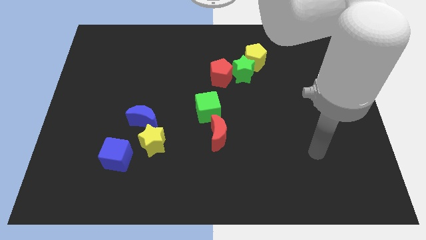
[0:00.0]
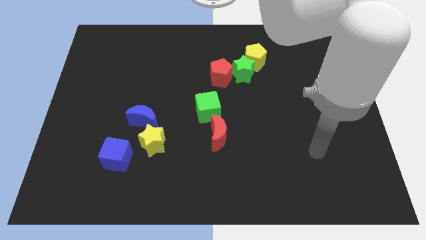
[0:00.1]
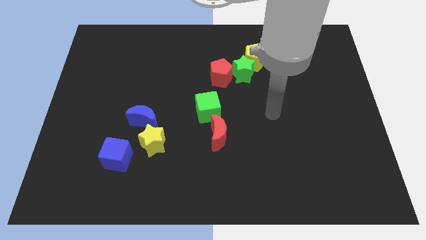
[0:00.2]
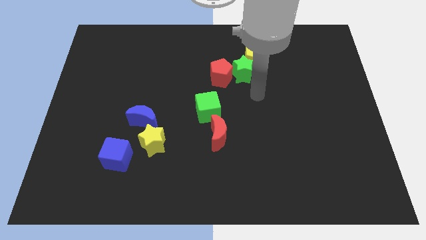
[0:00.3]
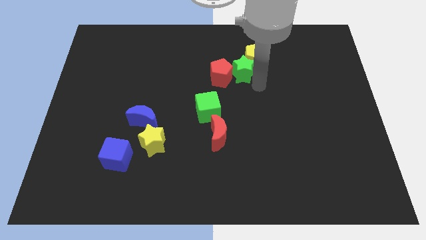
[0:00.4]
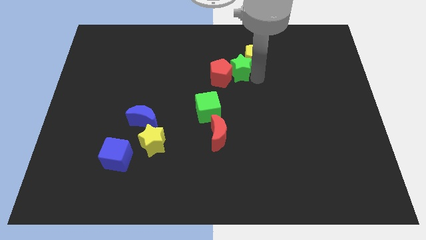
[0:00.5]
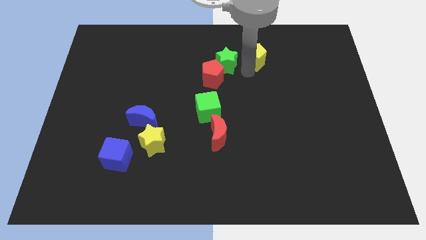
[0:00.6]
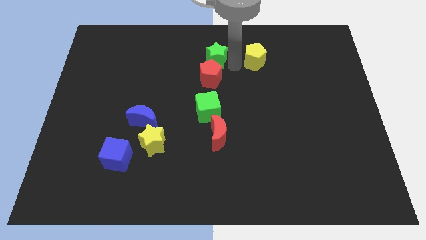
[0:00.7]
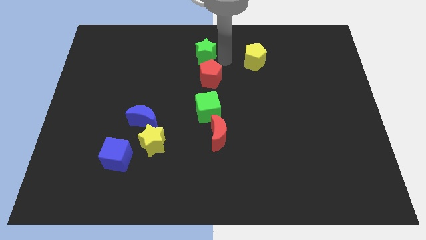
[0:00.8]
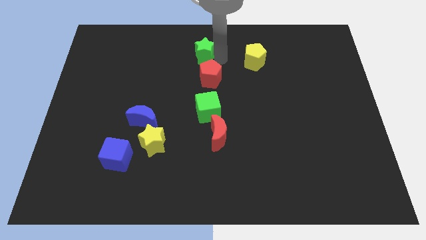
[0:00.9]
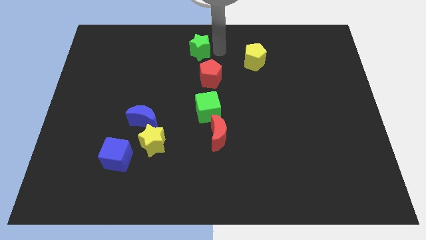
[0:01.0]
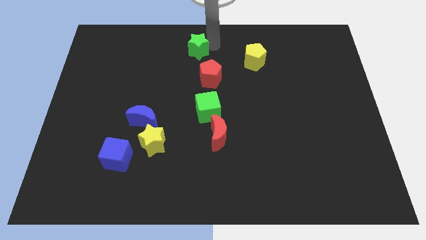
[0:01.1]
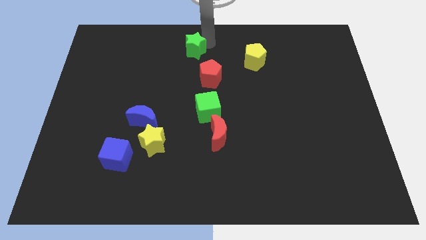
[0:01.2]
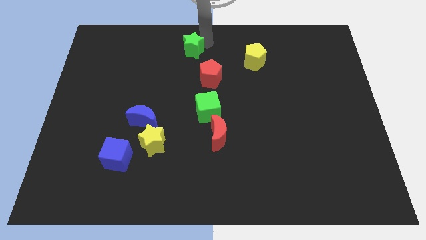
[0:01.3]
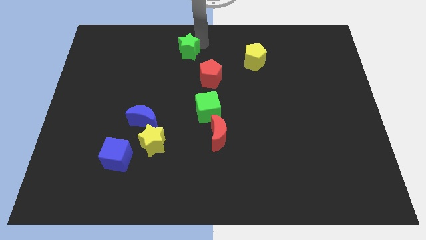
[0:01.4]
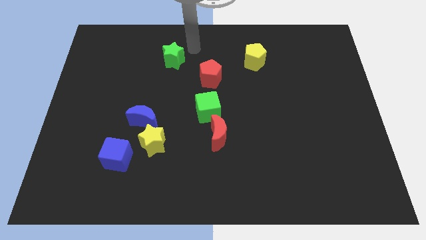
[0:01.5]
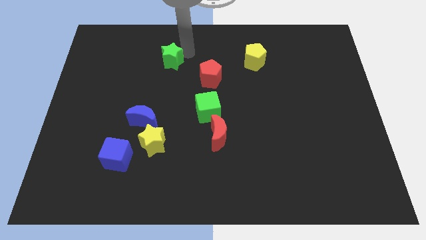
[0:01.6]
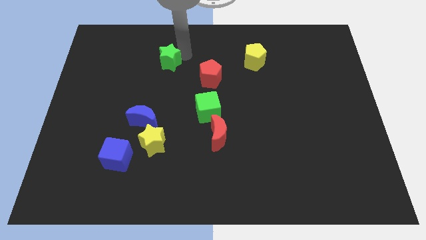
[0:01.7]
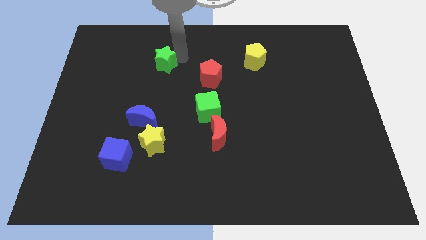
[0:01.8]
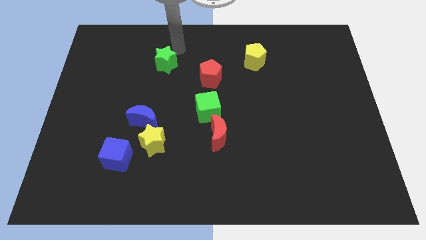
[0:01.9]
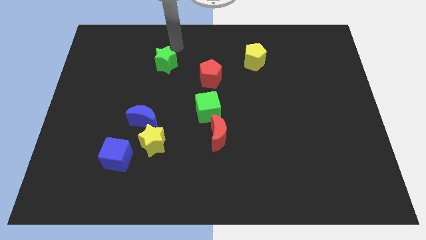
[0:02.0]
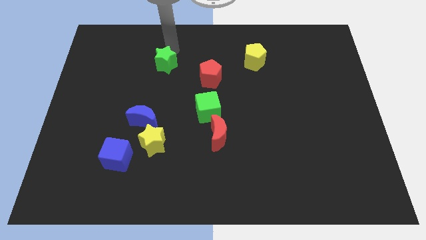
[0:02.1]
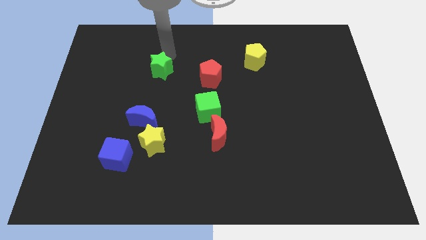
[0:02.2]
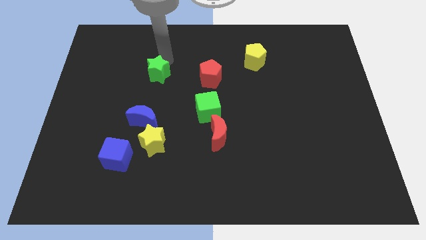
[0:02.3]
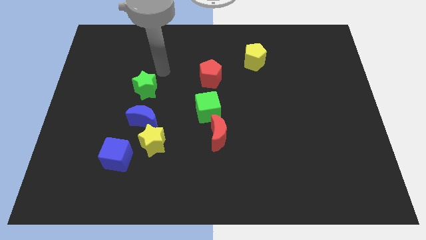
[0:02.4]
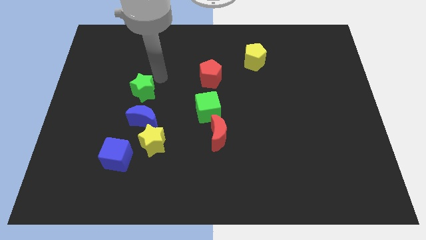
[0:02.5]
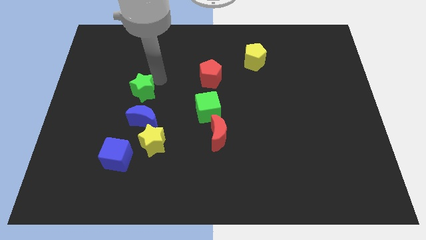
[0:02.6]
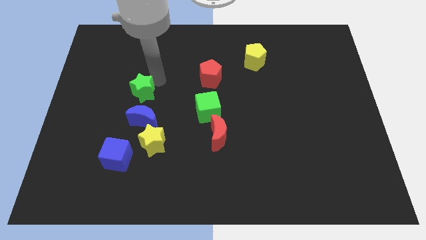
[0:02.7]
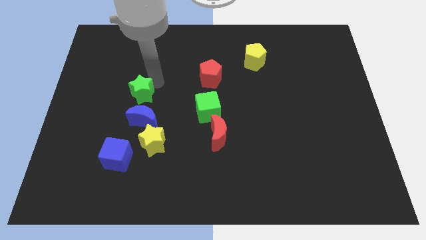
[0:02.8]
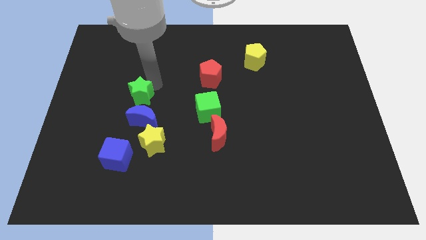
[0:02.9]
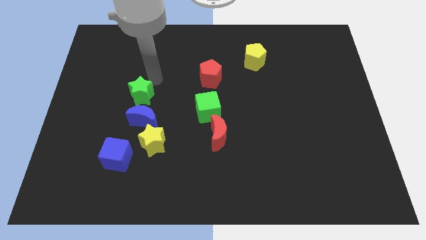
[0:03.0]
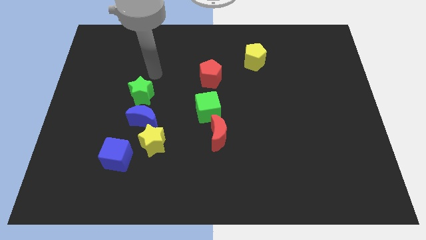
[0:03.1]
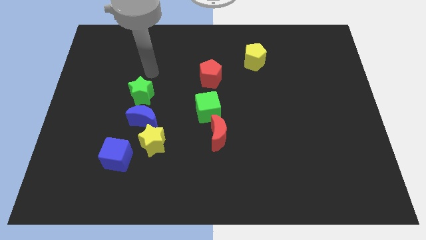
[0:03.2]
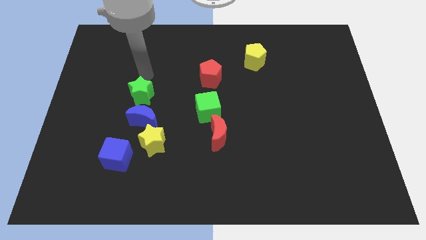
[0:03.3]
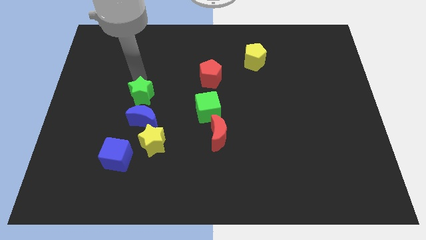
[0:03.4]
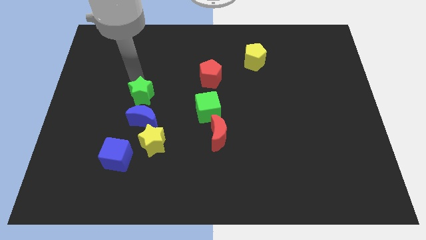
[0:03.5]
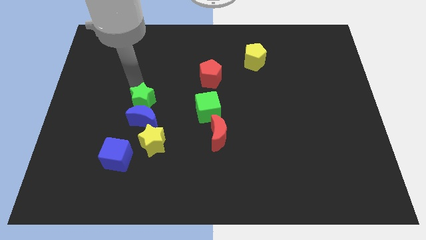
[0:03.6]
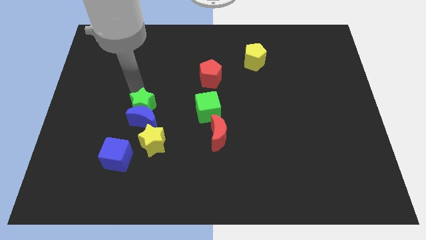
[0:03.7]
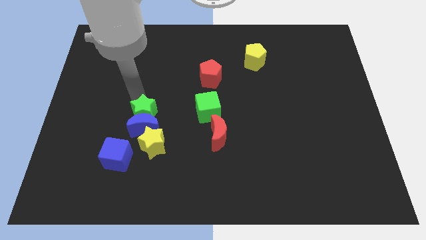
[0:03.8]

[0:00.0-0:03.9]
move the green star close to the blue moon

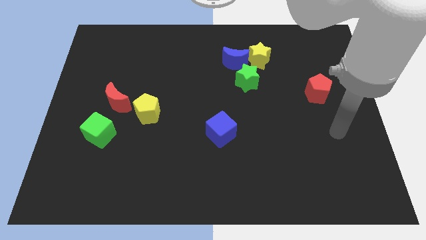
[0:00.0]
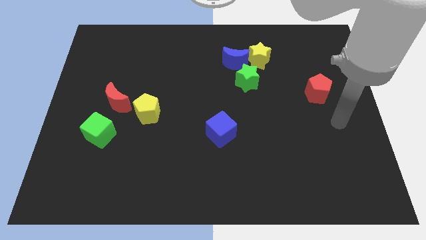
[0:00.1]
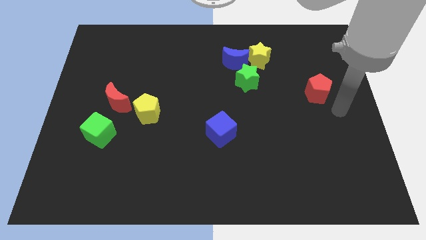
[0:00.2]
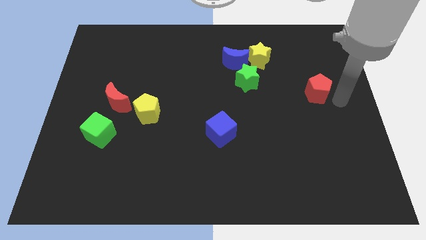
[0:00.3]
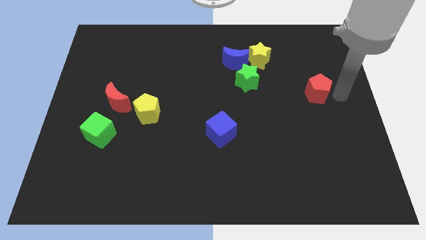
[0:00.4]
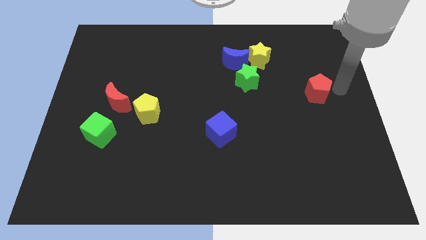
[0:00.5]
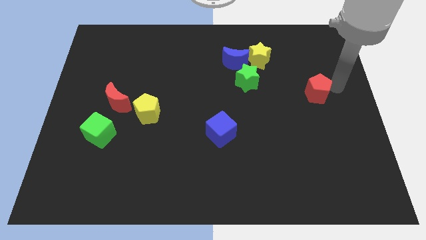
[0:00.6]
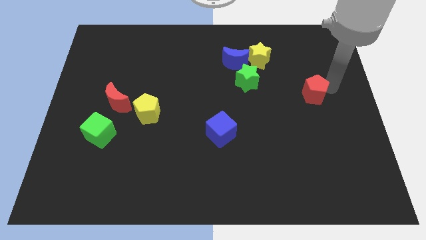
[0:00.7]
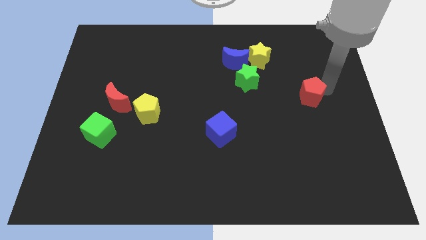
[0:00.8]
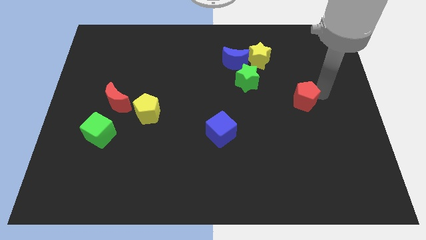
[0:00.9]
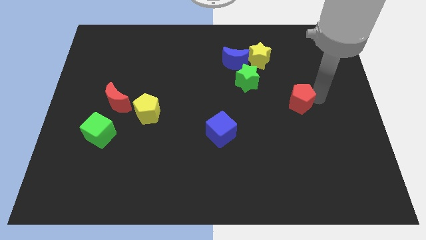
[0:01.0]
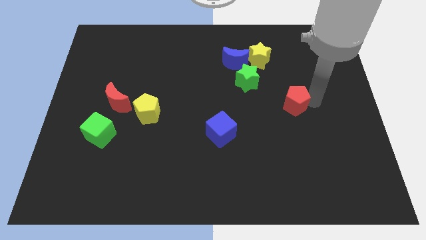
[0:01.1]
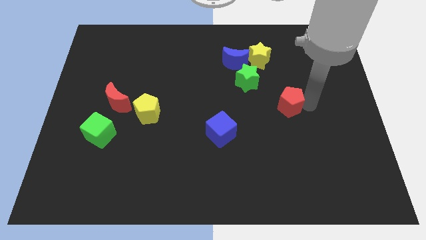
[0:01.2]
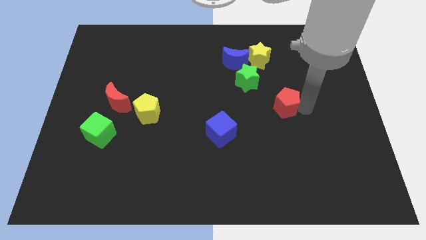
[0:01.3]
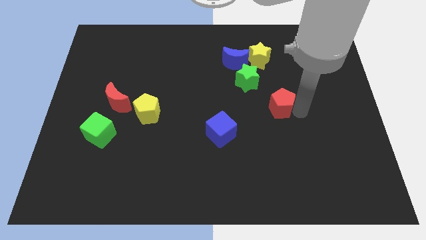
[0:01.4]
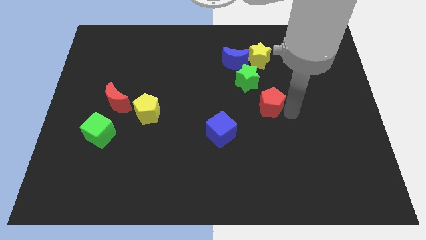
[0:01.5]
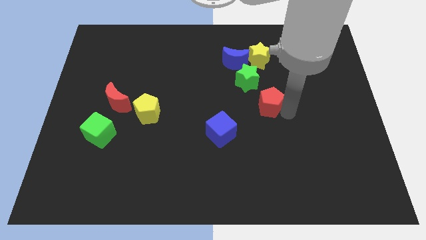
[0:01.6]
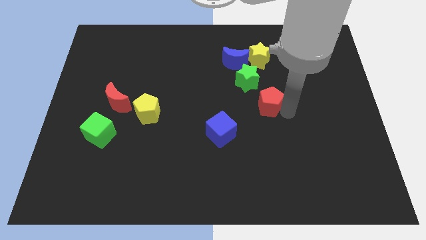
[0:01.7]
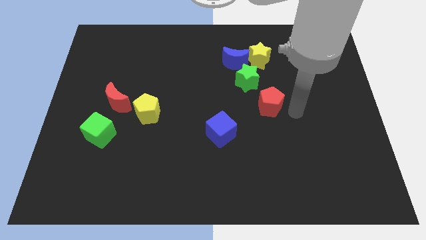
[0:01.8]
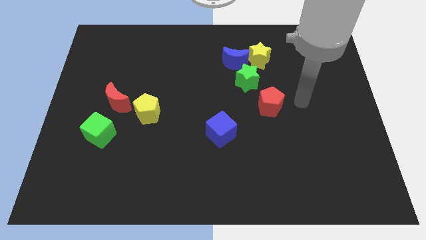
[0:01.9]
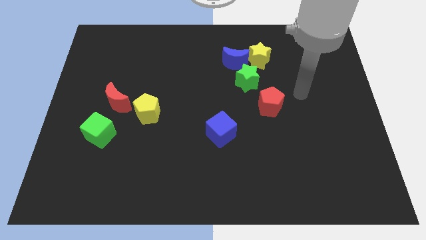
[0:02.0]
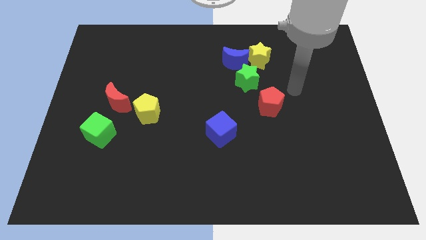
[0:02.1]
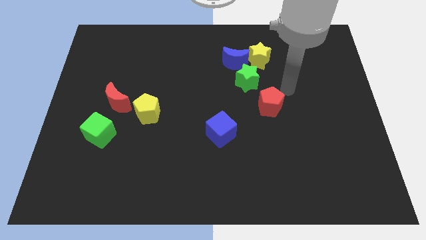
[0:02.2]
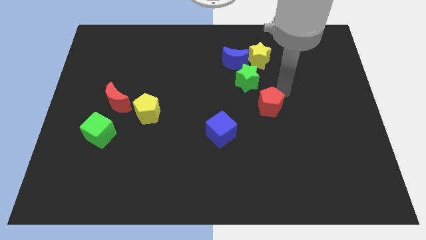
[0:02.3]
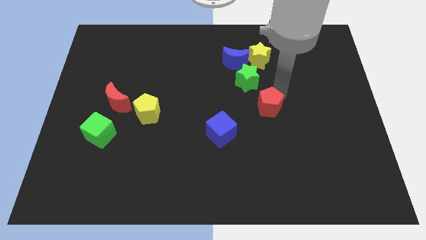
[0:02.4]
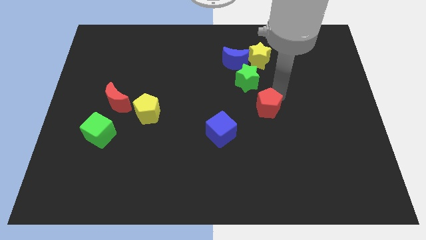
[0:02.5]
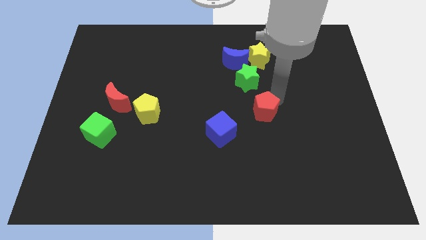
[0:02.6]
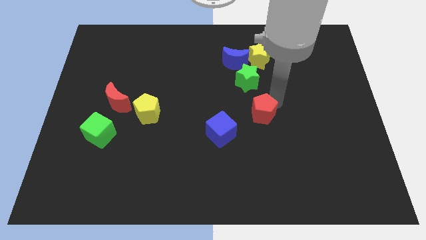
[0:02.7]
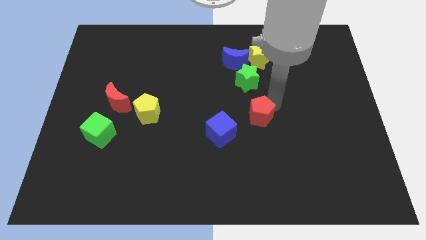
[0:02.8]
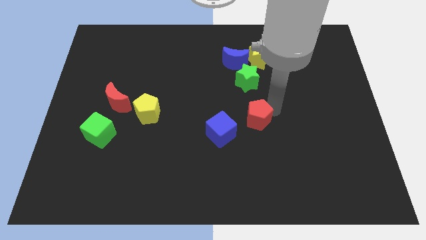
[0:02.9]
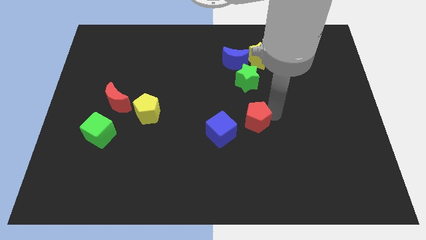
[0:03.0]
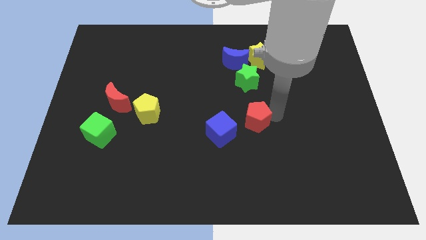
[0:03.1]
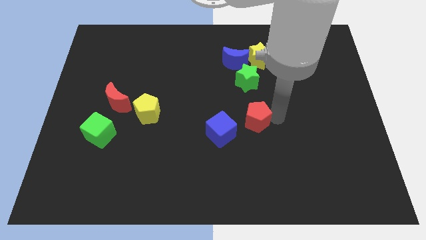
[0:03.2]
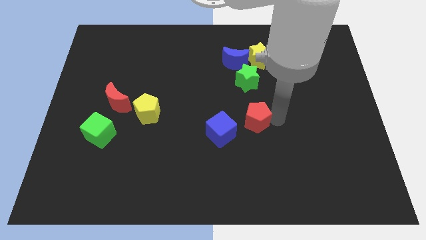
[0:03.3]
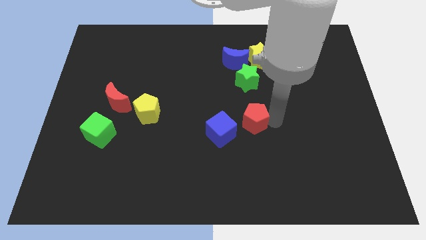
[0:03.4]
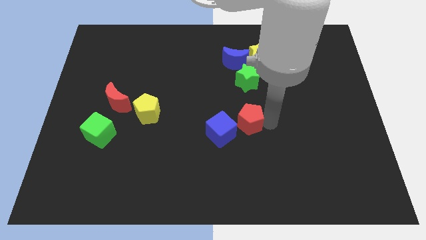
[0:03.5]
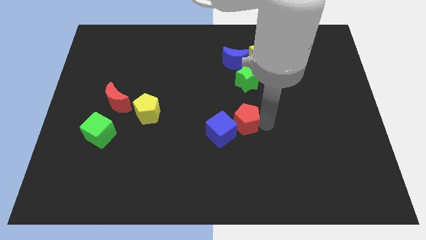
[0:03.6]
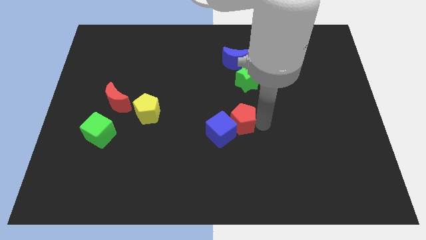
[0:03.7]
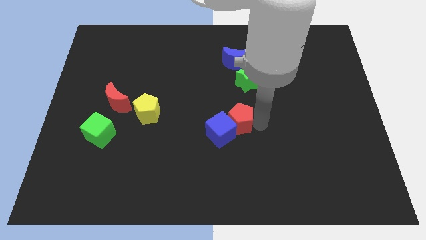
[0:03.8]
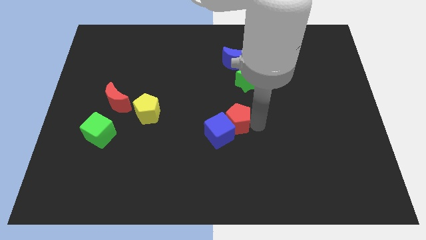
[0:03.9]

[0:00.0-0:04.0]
move the red pentagon towards the blue cube
